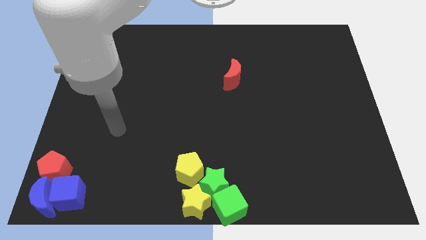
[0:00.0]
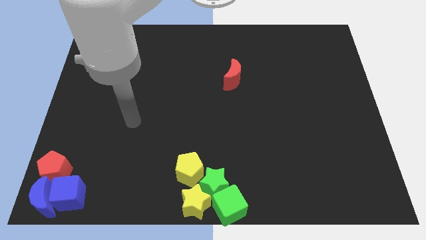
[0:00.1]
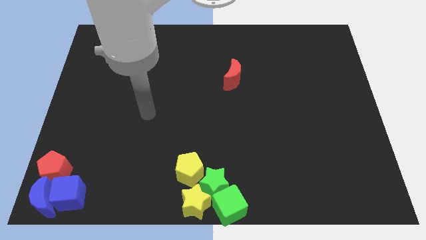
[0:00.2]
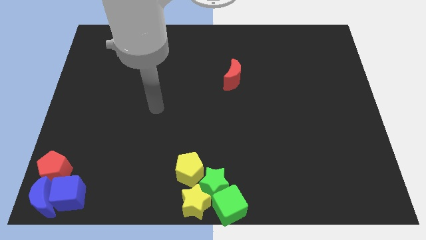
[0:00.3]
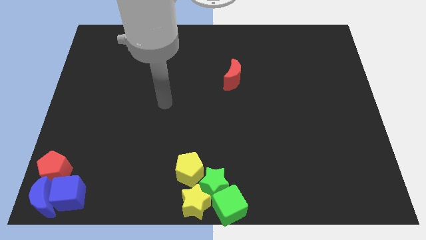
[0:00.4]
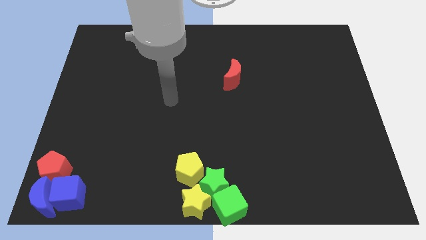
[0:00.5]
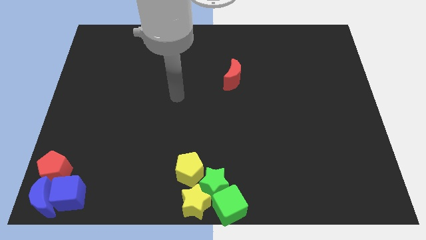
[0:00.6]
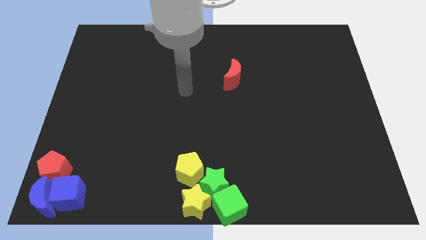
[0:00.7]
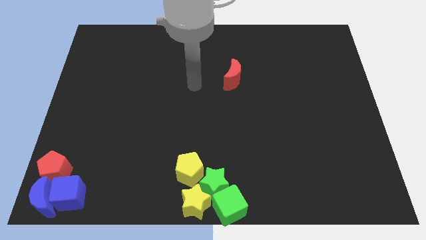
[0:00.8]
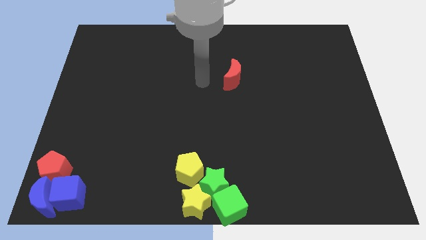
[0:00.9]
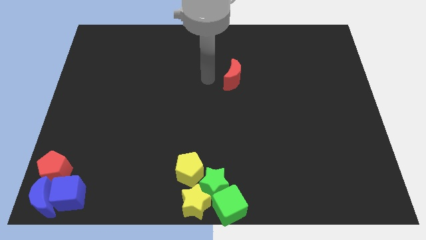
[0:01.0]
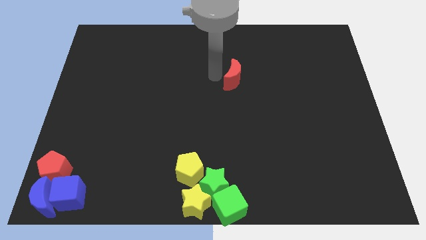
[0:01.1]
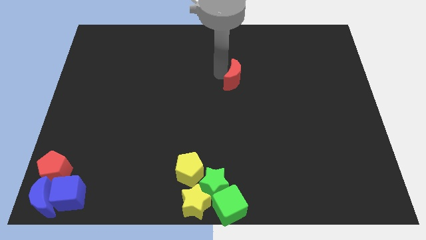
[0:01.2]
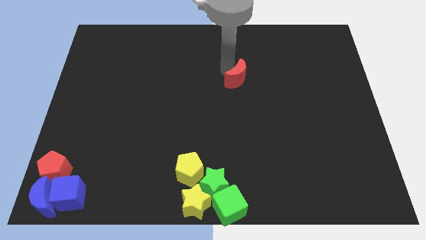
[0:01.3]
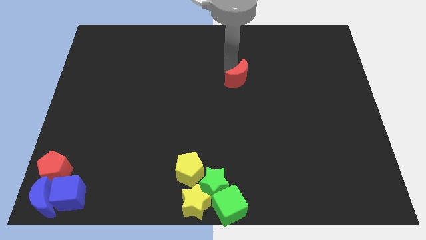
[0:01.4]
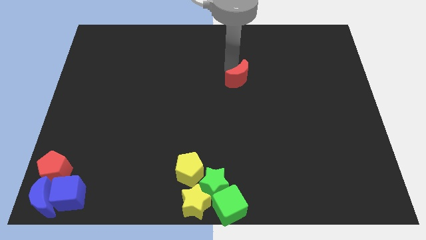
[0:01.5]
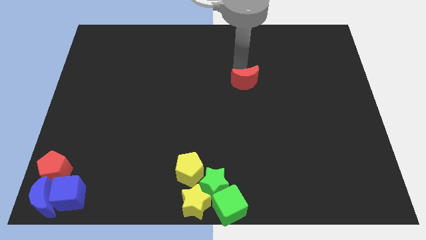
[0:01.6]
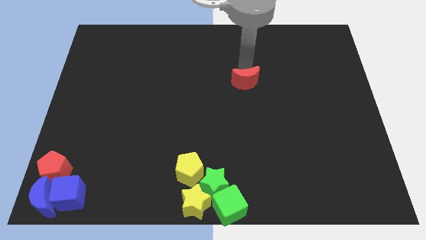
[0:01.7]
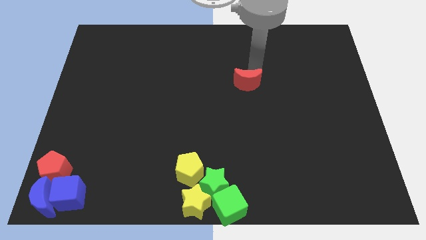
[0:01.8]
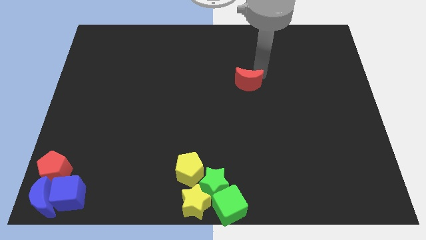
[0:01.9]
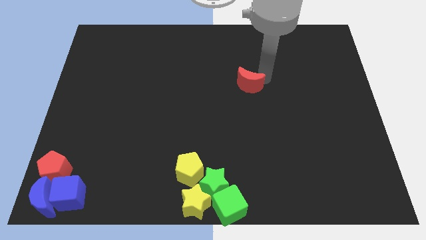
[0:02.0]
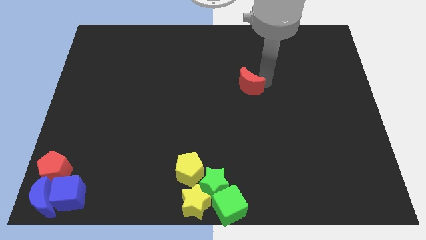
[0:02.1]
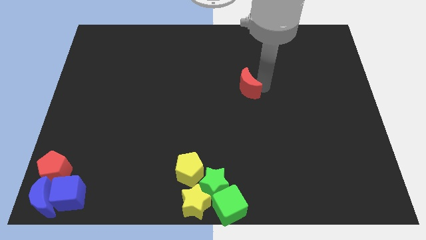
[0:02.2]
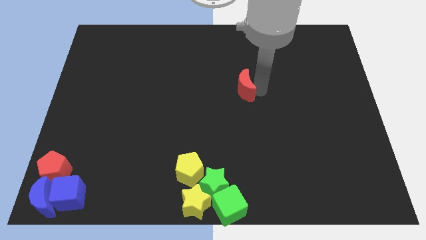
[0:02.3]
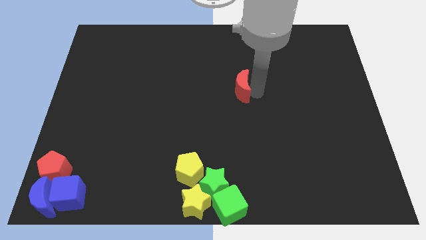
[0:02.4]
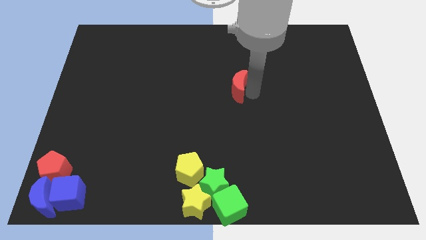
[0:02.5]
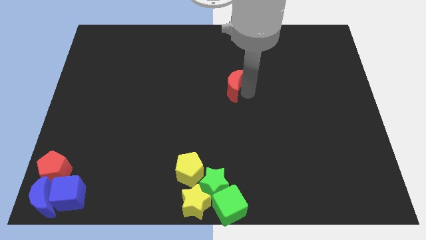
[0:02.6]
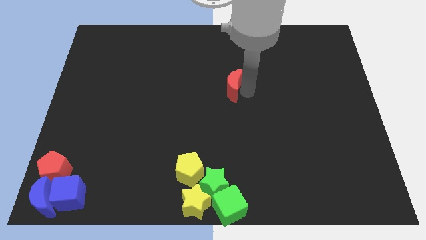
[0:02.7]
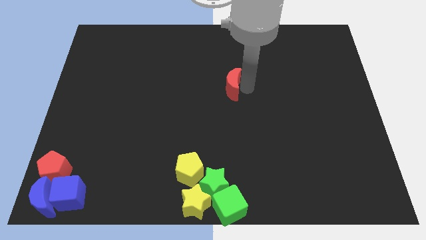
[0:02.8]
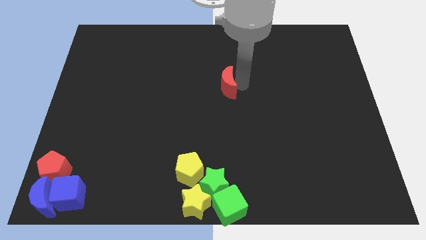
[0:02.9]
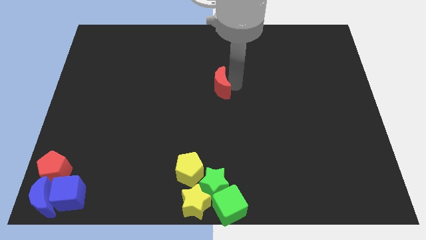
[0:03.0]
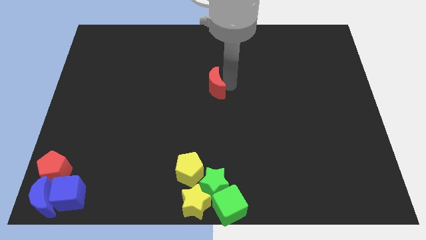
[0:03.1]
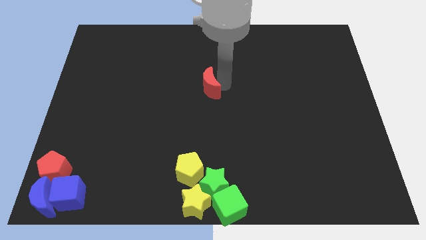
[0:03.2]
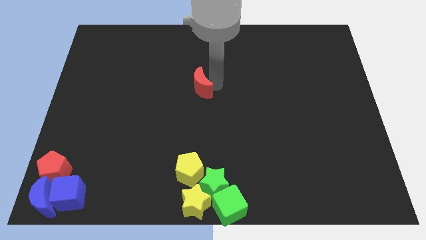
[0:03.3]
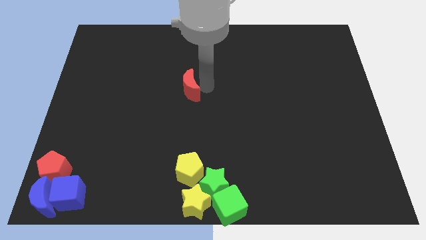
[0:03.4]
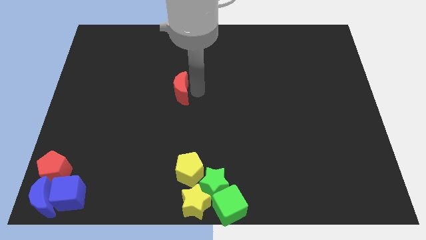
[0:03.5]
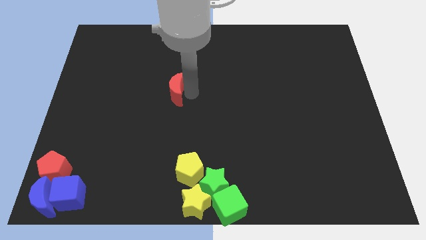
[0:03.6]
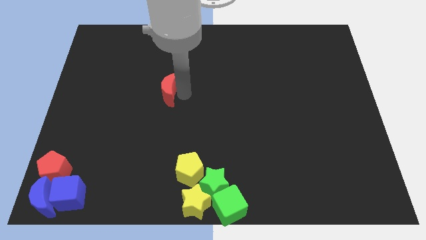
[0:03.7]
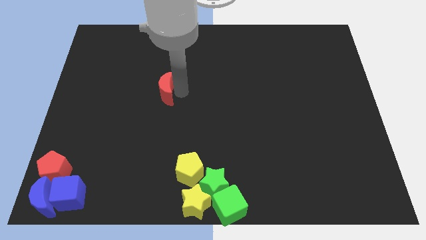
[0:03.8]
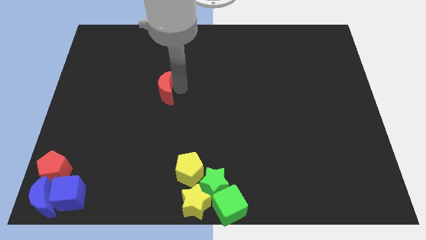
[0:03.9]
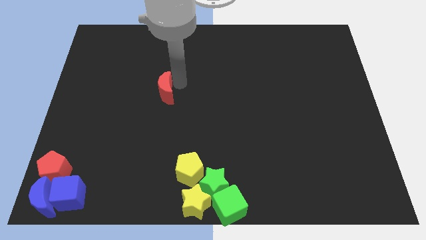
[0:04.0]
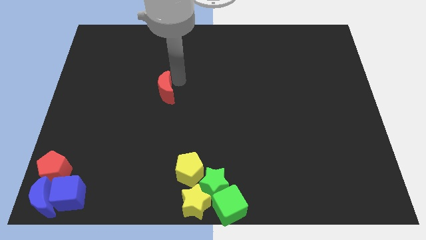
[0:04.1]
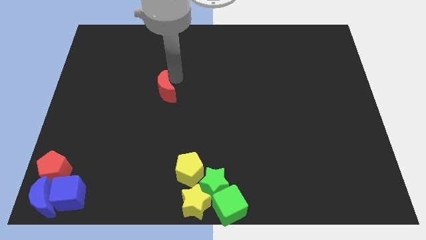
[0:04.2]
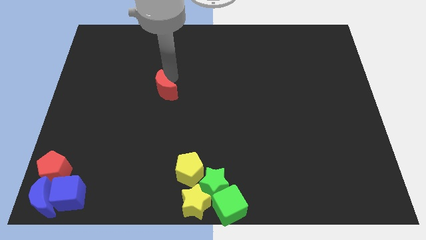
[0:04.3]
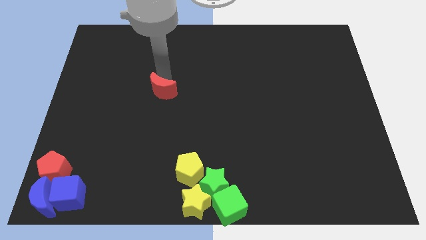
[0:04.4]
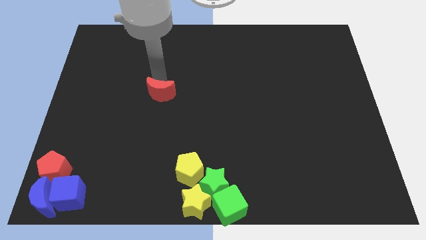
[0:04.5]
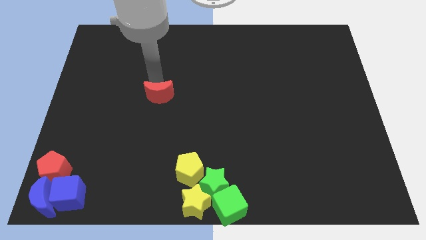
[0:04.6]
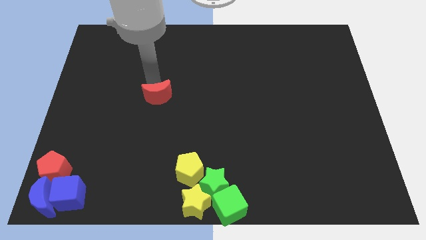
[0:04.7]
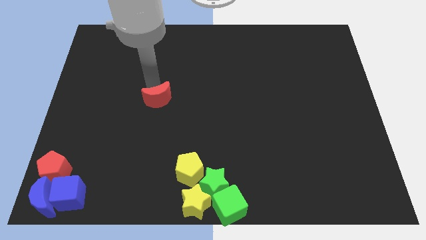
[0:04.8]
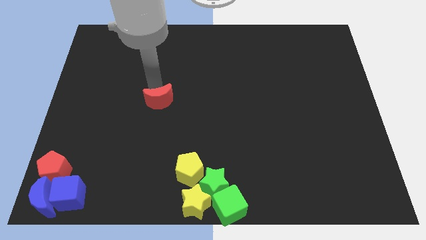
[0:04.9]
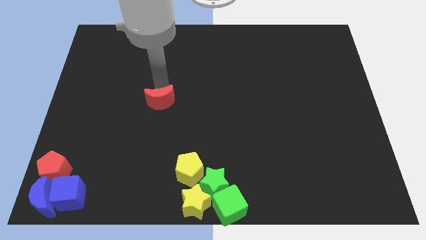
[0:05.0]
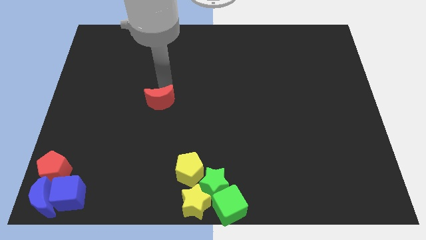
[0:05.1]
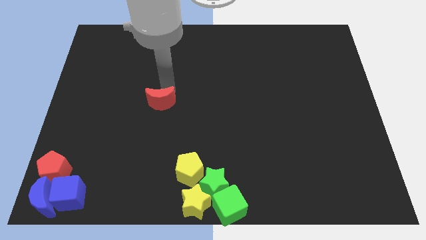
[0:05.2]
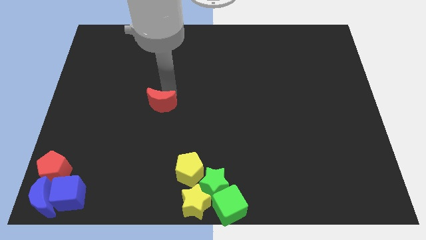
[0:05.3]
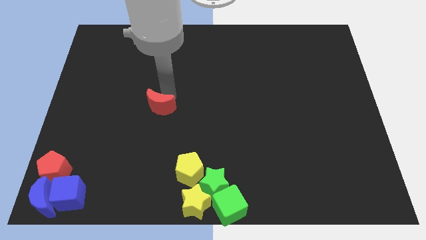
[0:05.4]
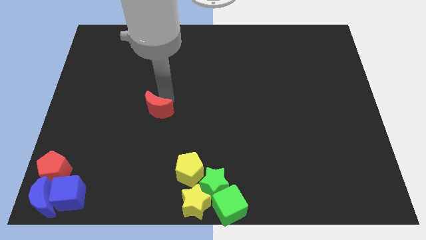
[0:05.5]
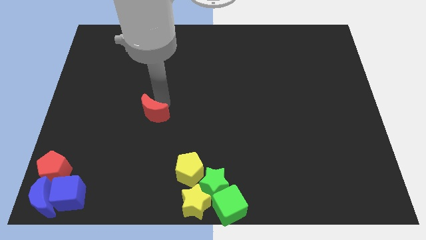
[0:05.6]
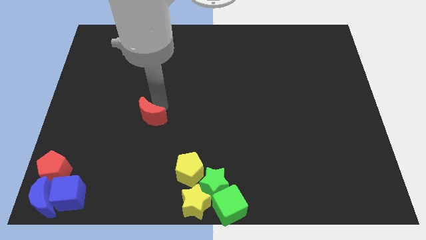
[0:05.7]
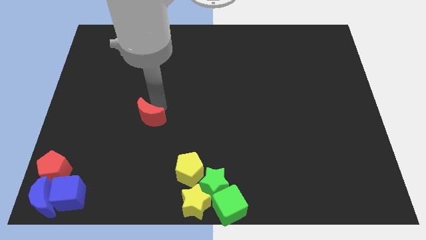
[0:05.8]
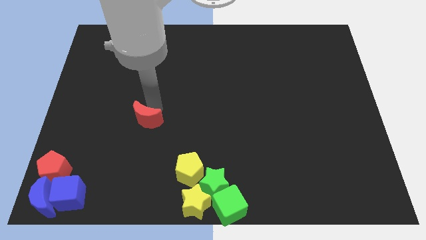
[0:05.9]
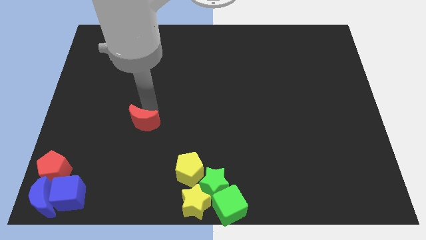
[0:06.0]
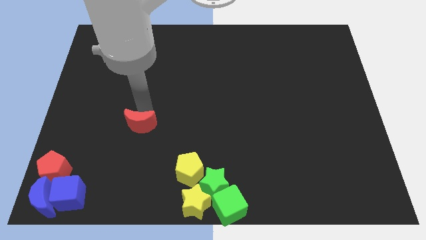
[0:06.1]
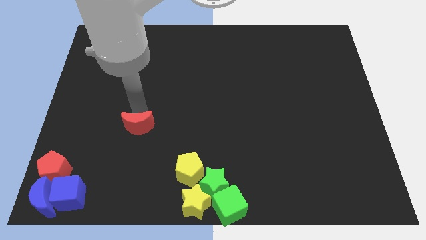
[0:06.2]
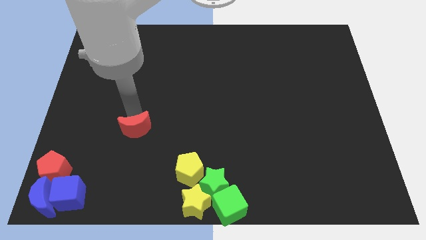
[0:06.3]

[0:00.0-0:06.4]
push the red crescent to the down left to the board

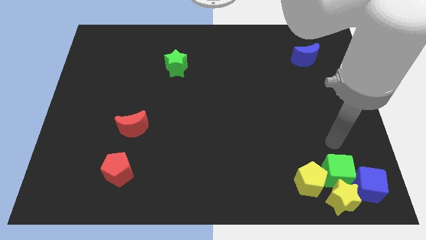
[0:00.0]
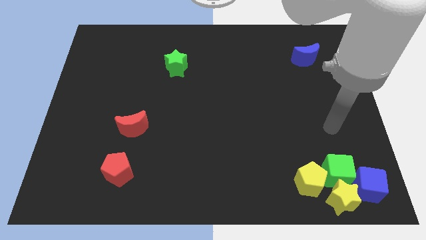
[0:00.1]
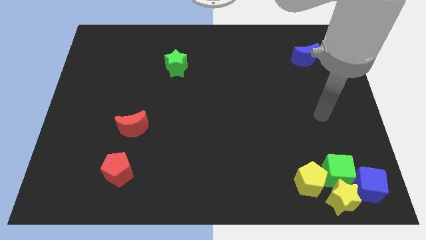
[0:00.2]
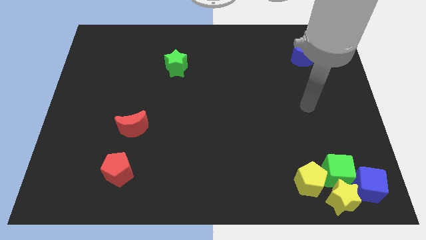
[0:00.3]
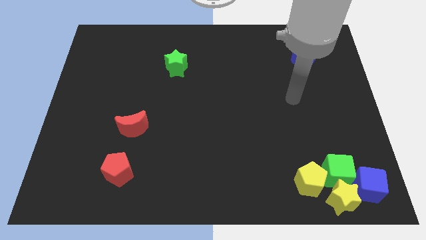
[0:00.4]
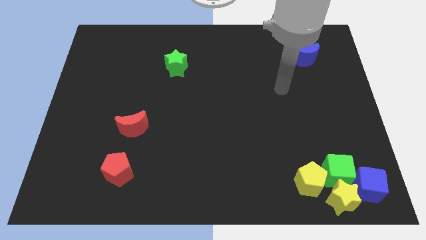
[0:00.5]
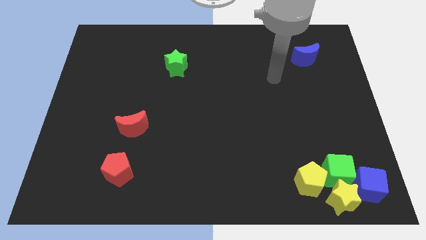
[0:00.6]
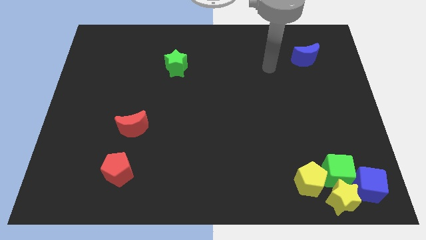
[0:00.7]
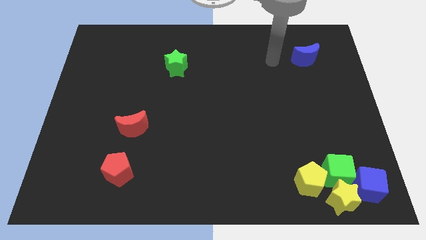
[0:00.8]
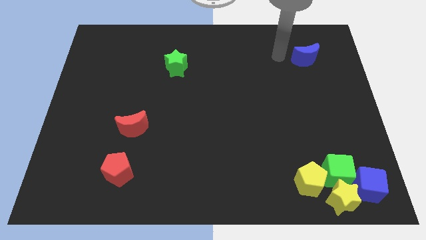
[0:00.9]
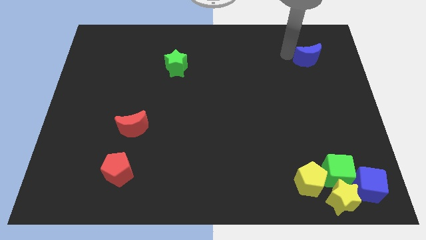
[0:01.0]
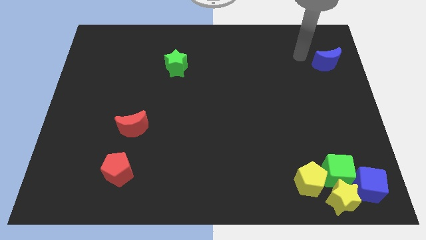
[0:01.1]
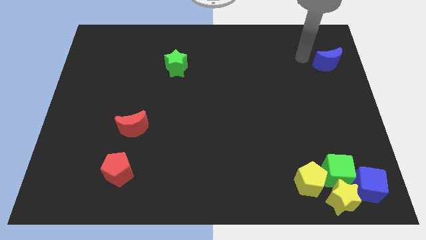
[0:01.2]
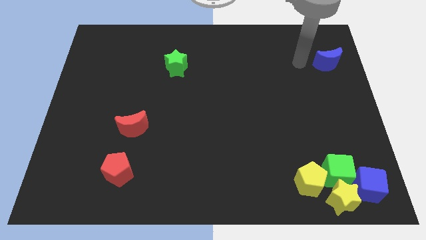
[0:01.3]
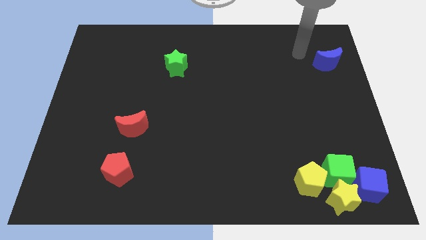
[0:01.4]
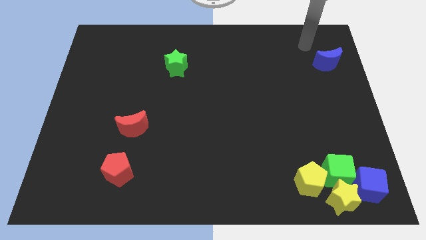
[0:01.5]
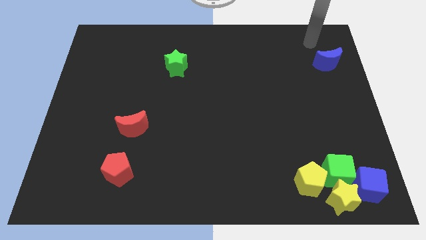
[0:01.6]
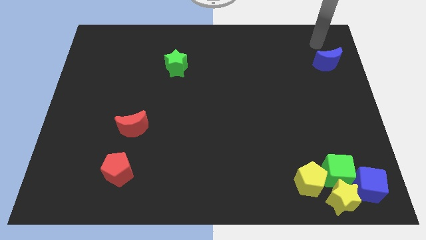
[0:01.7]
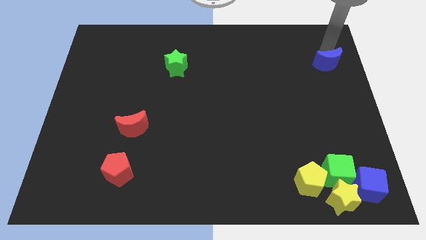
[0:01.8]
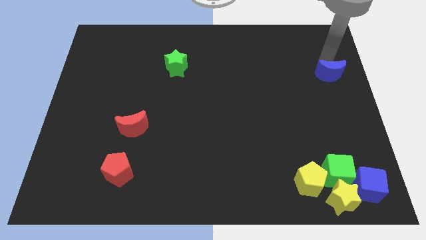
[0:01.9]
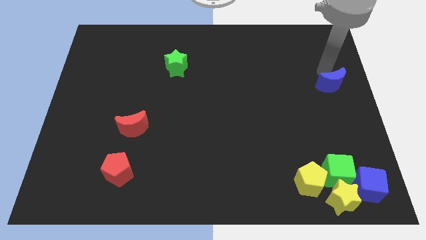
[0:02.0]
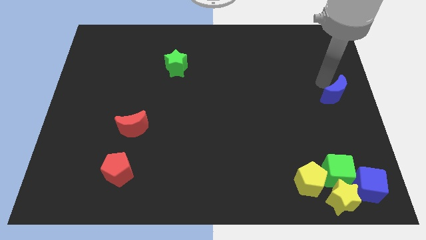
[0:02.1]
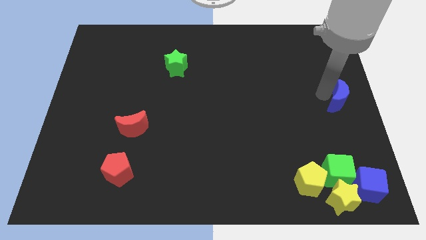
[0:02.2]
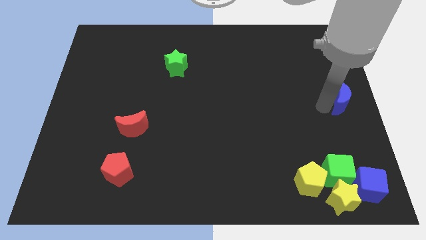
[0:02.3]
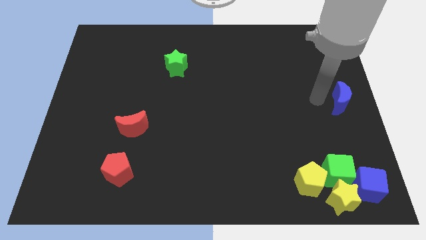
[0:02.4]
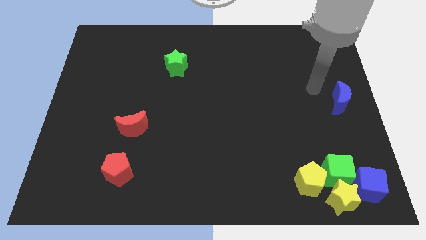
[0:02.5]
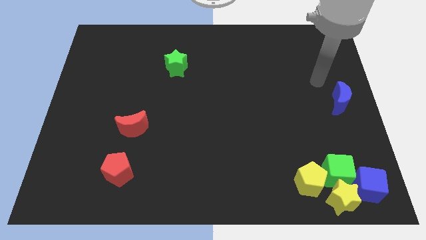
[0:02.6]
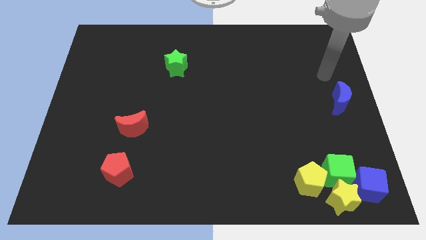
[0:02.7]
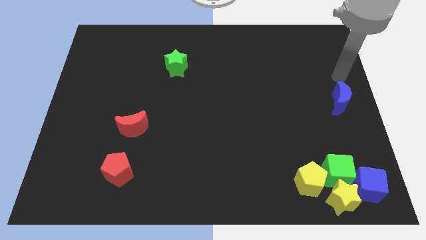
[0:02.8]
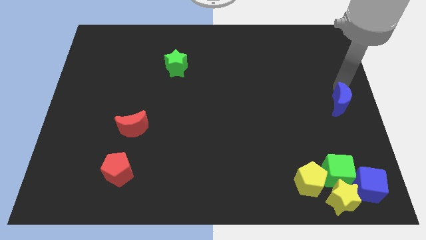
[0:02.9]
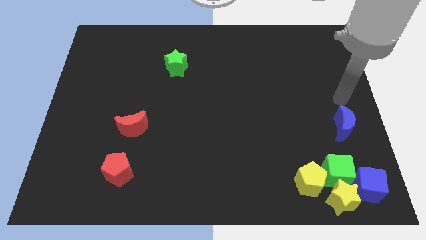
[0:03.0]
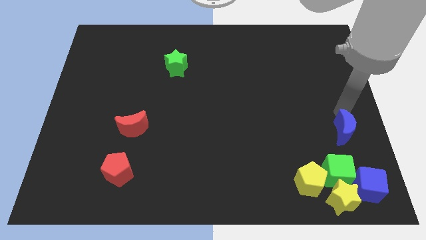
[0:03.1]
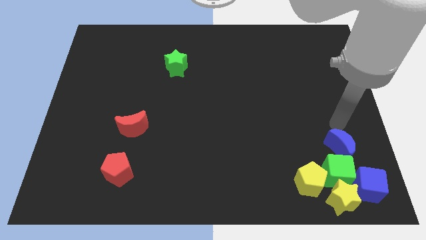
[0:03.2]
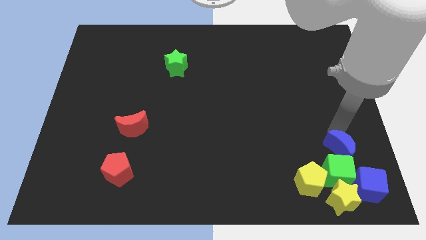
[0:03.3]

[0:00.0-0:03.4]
push the blue moon to the top of green cube
